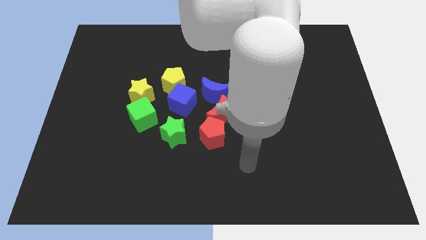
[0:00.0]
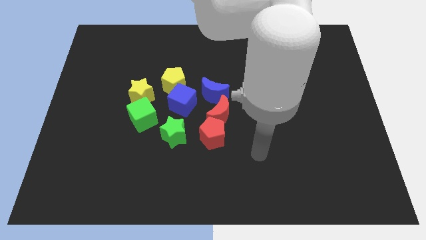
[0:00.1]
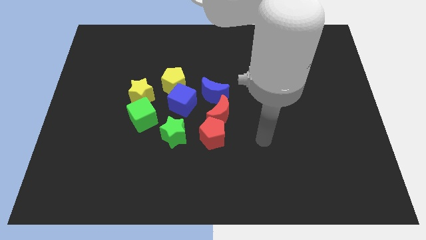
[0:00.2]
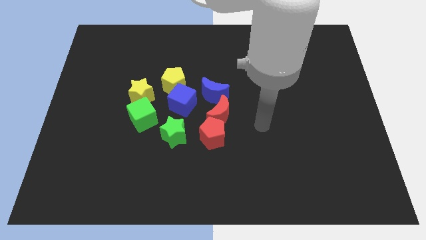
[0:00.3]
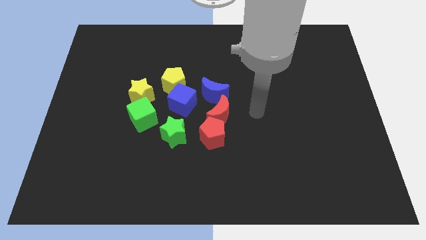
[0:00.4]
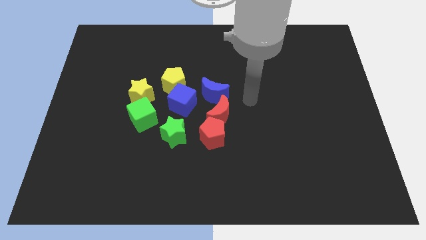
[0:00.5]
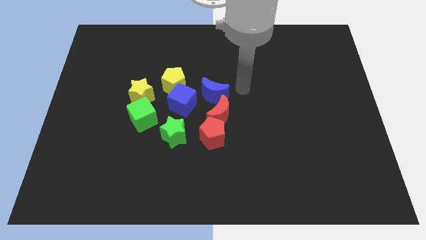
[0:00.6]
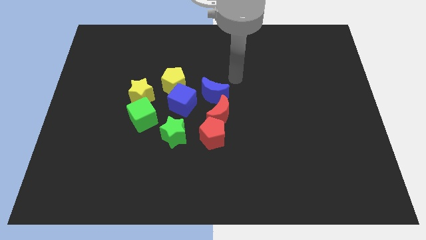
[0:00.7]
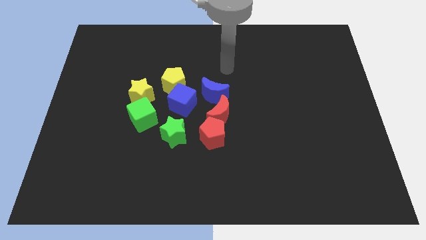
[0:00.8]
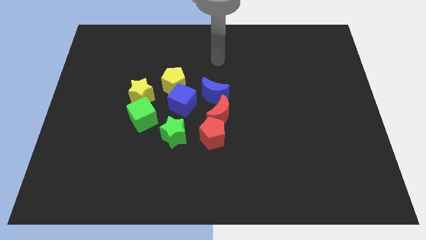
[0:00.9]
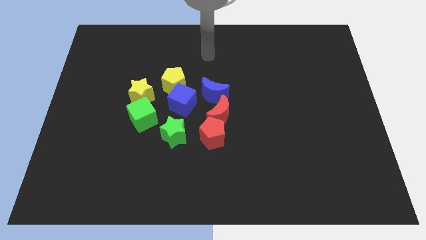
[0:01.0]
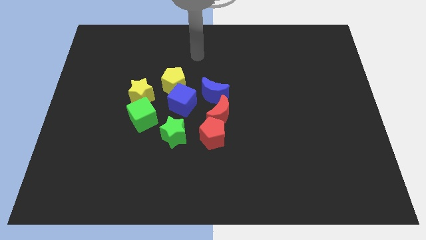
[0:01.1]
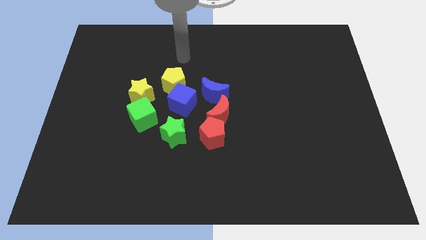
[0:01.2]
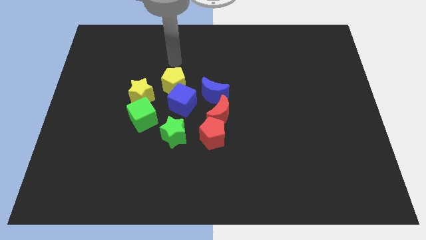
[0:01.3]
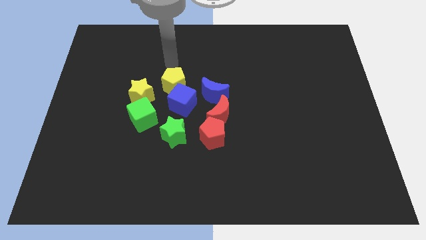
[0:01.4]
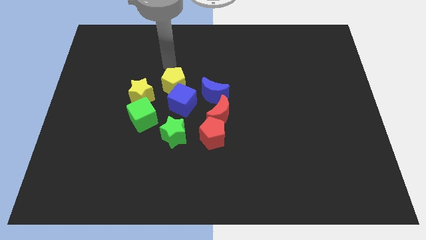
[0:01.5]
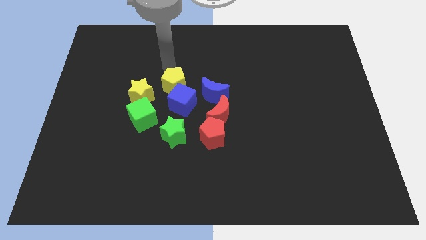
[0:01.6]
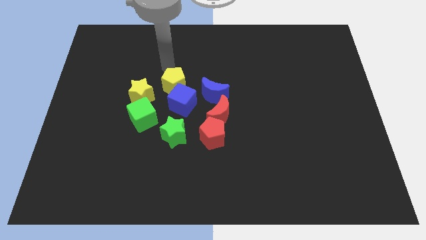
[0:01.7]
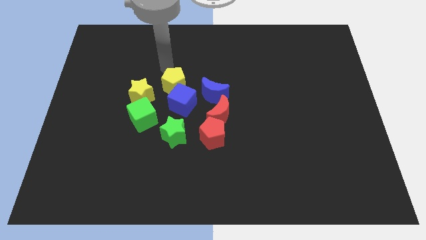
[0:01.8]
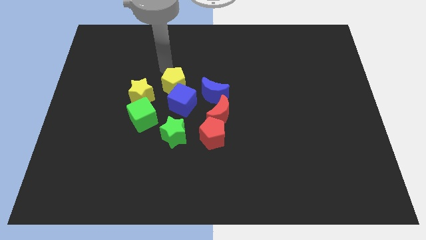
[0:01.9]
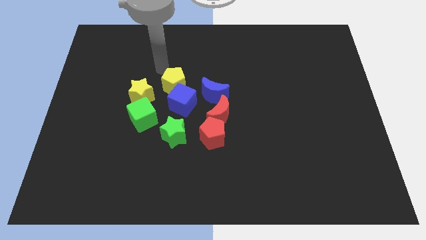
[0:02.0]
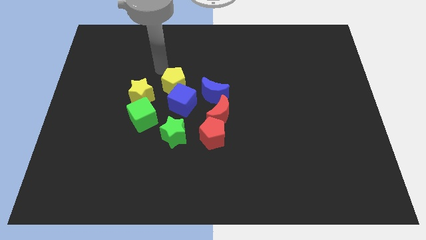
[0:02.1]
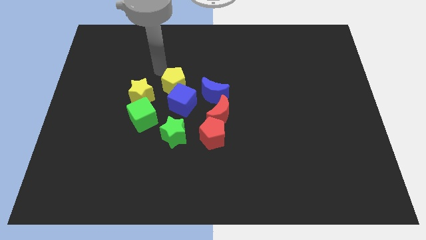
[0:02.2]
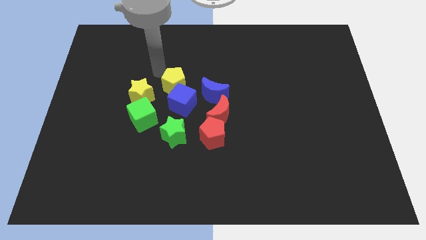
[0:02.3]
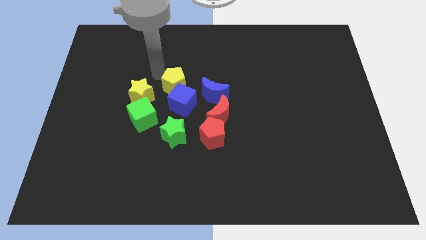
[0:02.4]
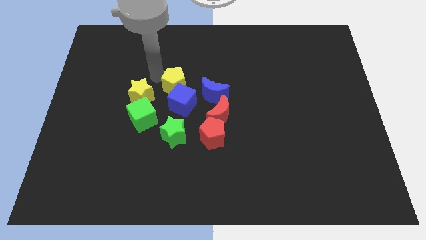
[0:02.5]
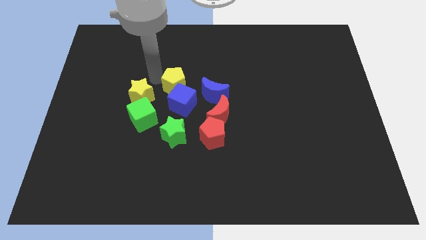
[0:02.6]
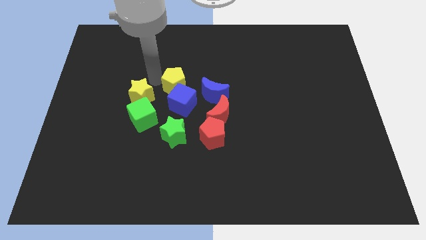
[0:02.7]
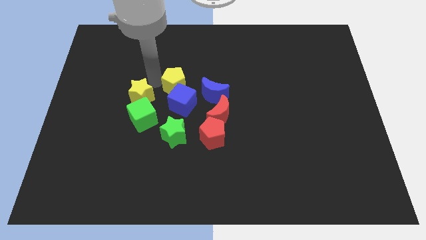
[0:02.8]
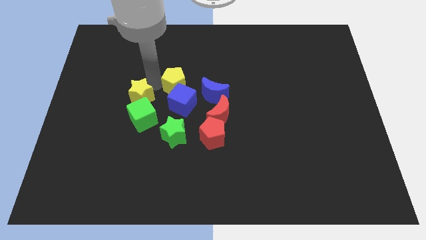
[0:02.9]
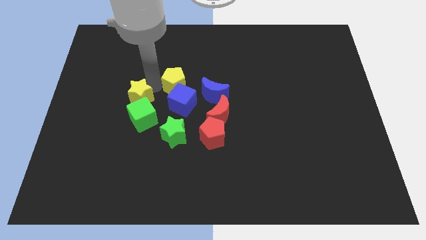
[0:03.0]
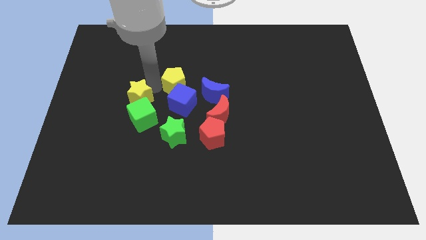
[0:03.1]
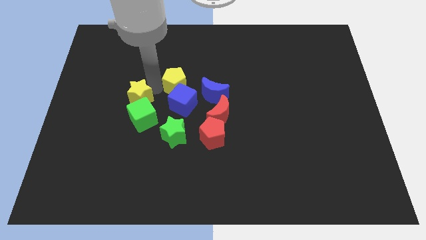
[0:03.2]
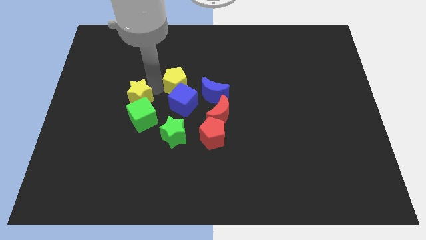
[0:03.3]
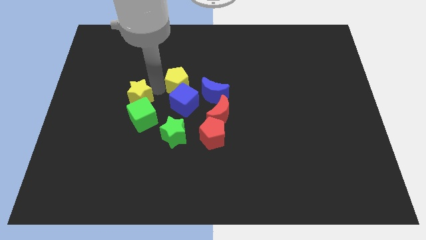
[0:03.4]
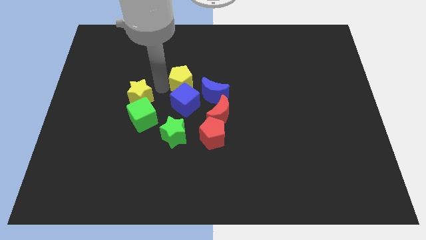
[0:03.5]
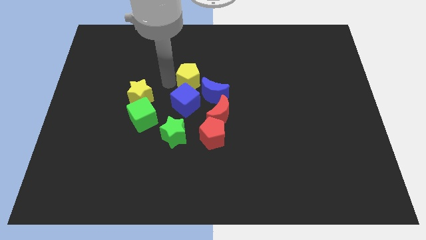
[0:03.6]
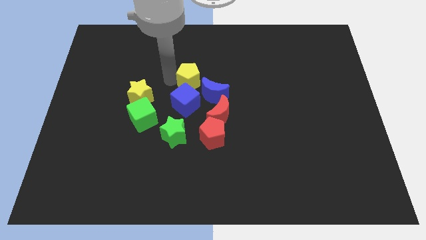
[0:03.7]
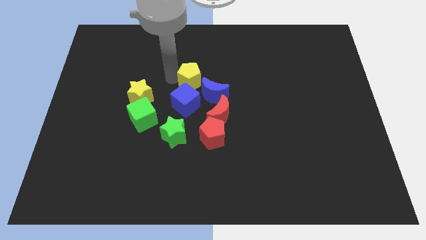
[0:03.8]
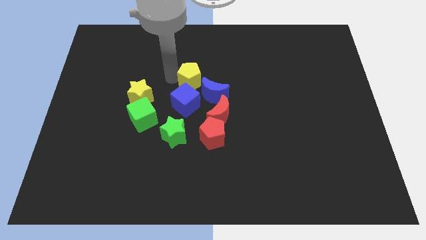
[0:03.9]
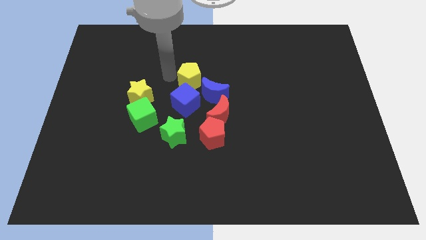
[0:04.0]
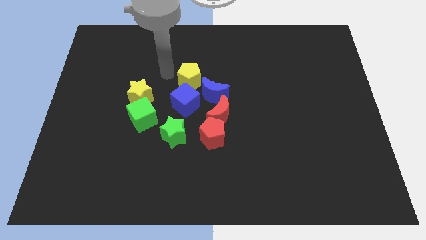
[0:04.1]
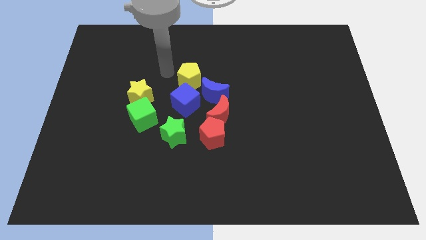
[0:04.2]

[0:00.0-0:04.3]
slightly push the yellow pentagon above the blue cube

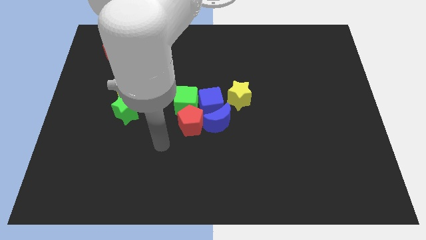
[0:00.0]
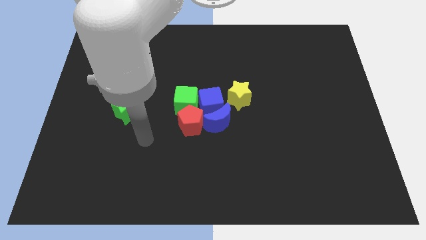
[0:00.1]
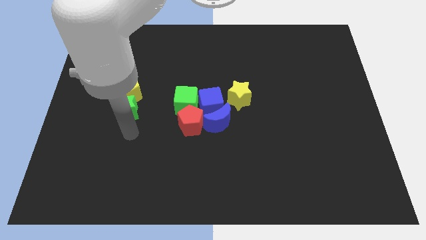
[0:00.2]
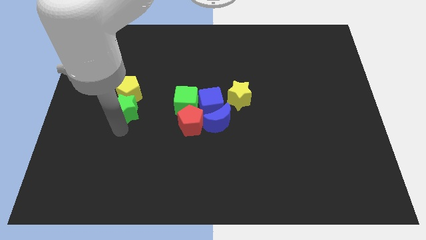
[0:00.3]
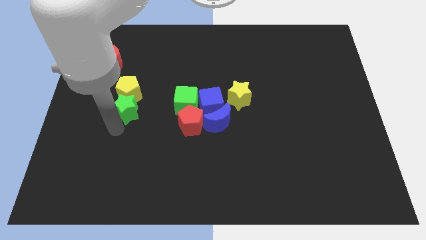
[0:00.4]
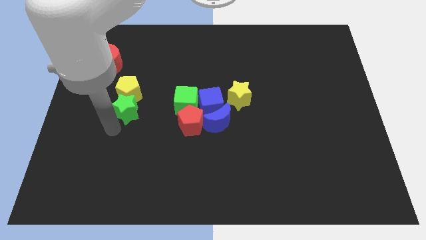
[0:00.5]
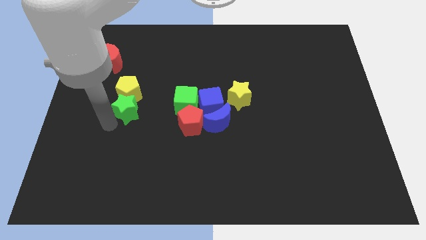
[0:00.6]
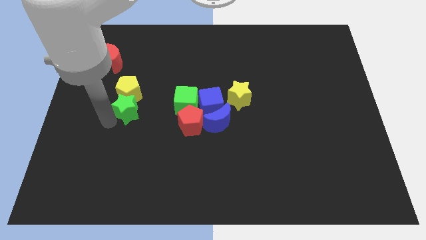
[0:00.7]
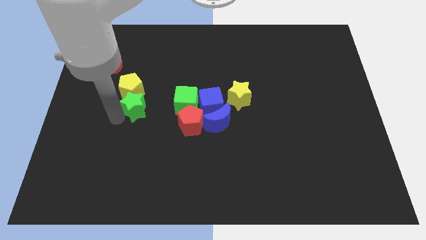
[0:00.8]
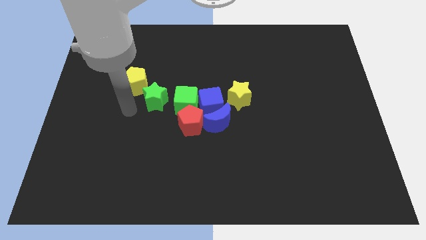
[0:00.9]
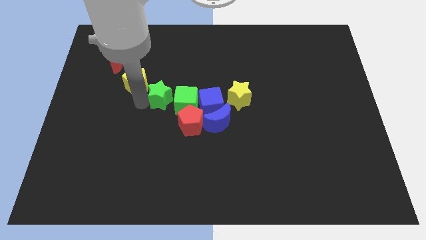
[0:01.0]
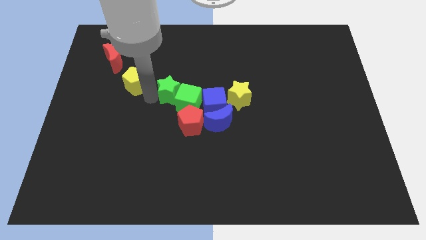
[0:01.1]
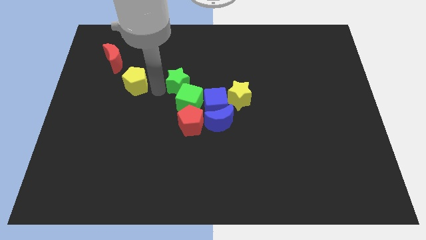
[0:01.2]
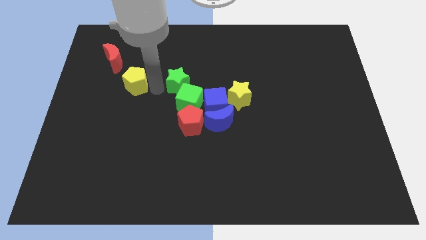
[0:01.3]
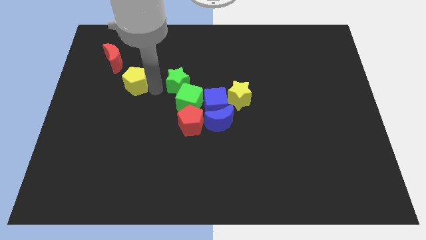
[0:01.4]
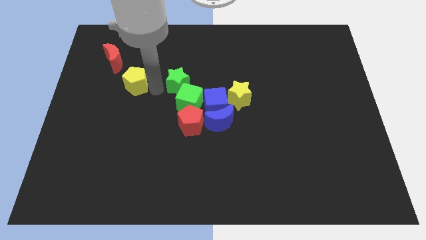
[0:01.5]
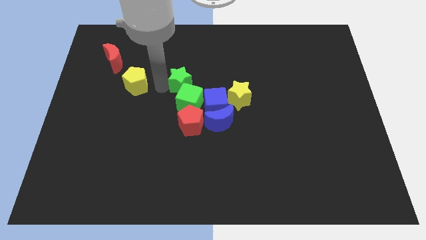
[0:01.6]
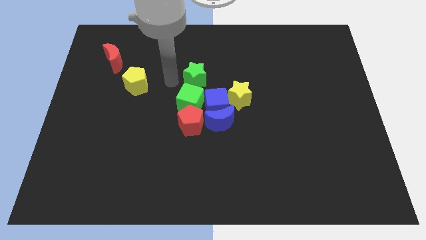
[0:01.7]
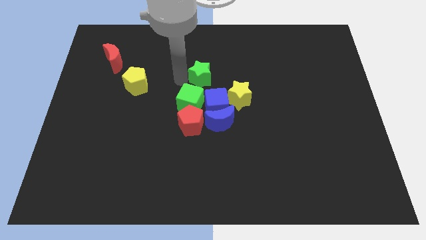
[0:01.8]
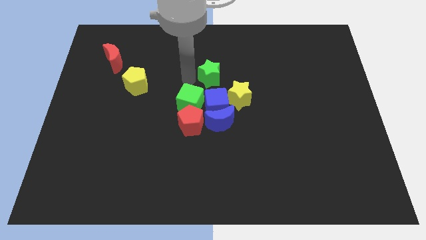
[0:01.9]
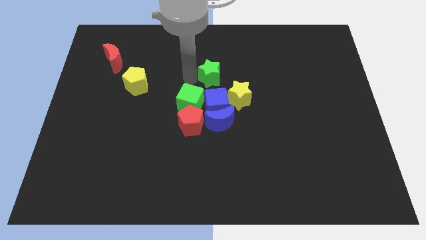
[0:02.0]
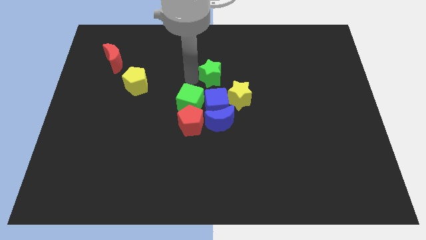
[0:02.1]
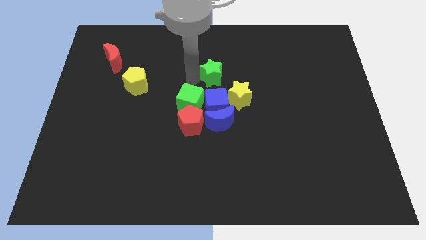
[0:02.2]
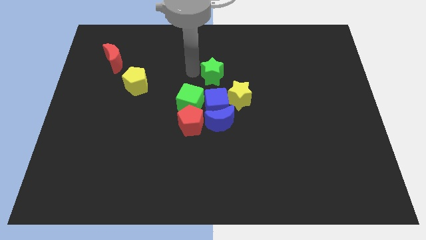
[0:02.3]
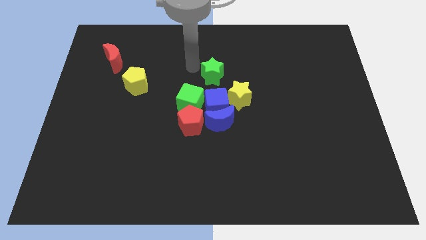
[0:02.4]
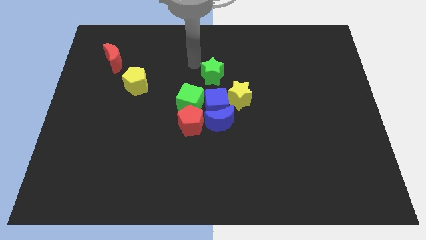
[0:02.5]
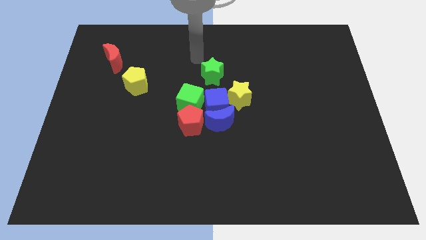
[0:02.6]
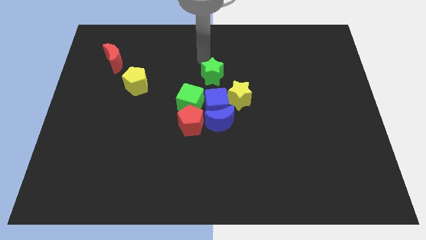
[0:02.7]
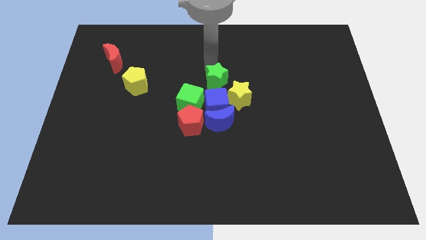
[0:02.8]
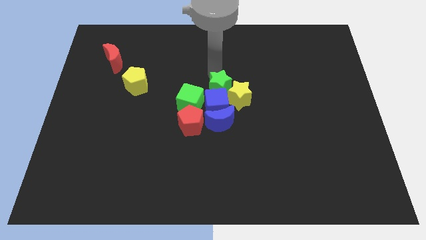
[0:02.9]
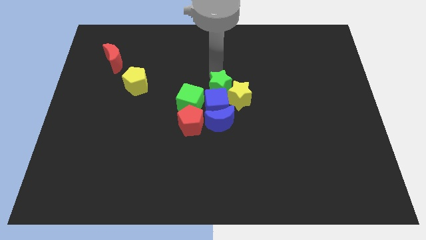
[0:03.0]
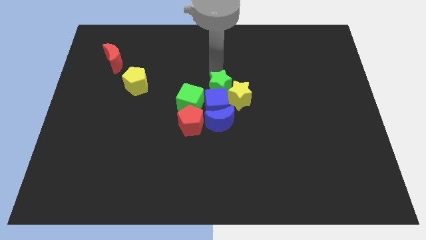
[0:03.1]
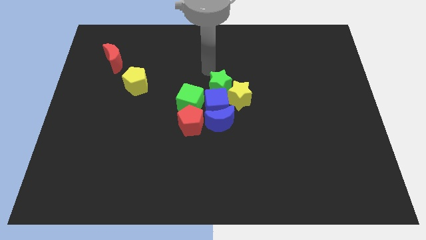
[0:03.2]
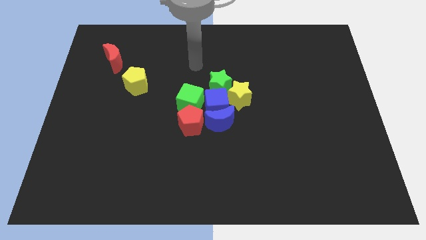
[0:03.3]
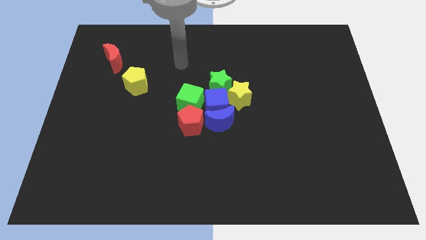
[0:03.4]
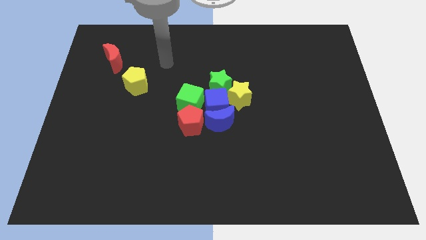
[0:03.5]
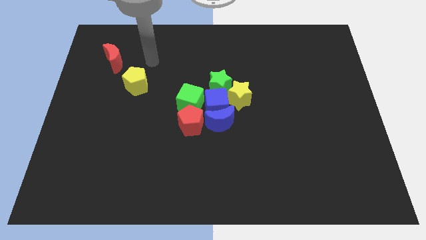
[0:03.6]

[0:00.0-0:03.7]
put the green star diagonally to the yellow star

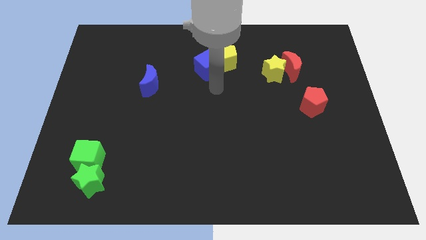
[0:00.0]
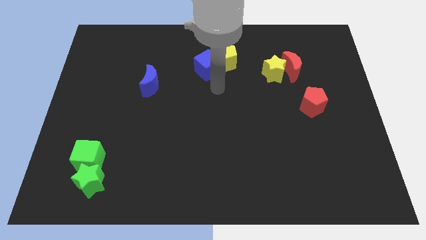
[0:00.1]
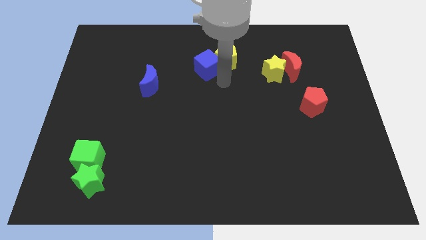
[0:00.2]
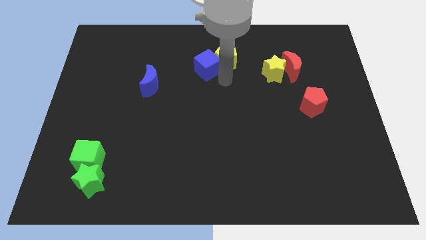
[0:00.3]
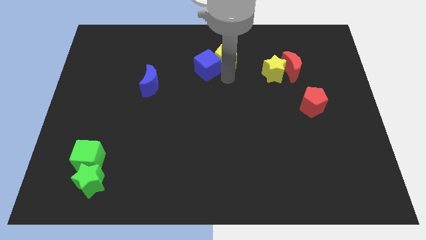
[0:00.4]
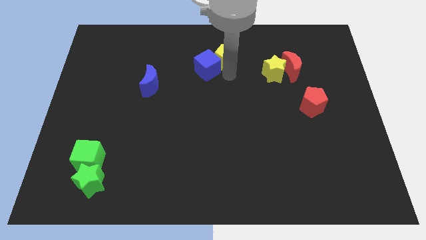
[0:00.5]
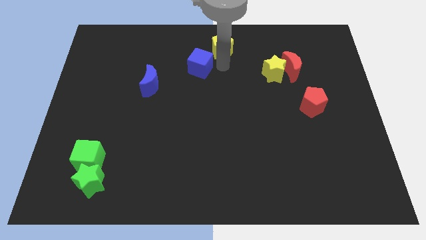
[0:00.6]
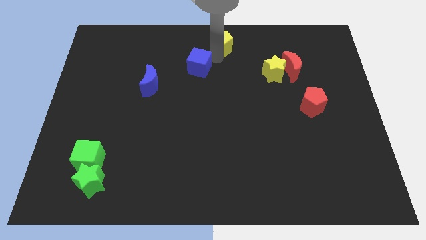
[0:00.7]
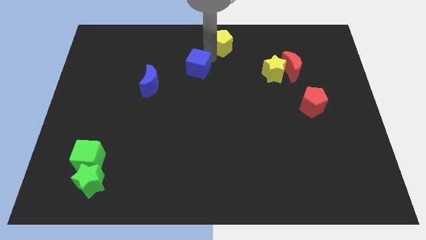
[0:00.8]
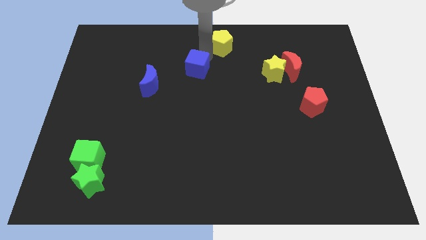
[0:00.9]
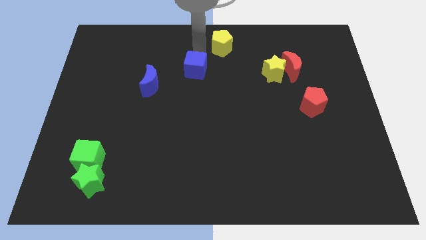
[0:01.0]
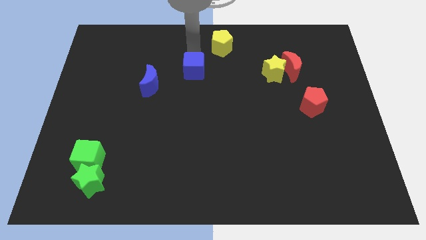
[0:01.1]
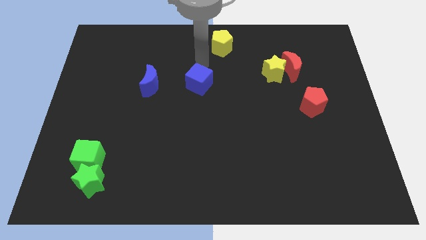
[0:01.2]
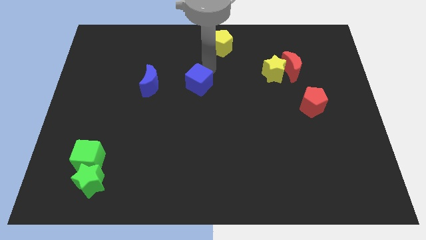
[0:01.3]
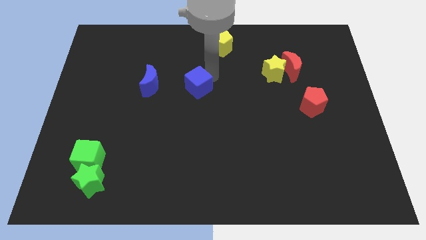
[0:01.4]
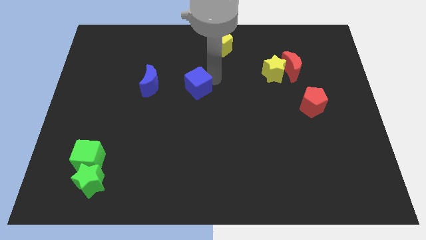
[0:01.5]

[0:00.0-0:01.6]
separate blue cube from yellow pentagon
